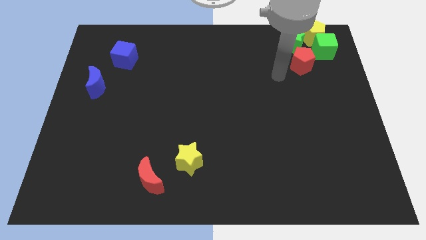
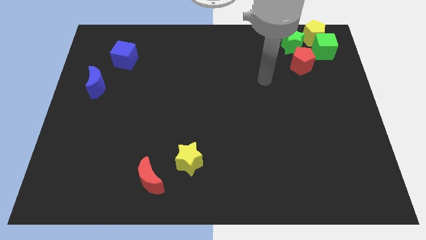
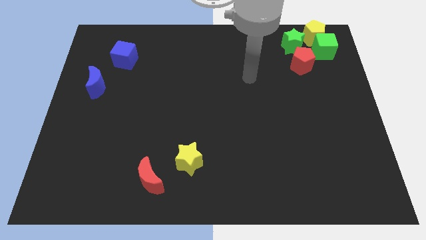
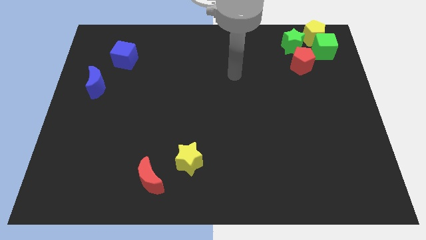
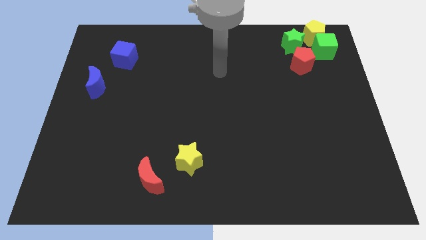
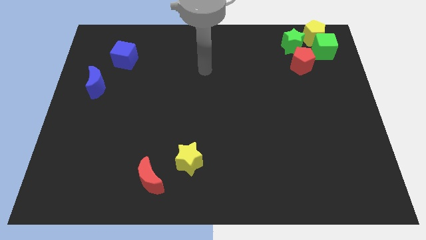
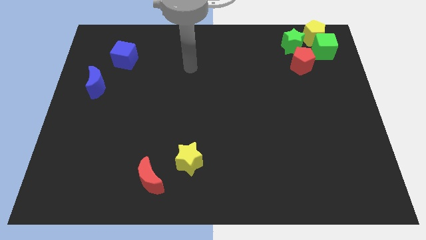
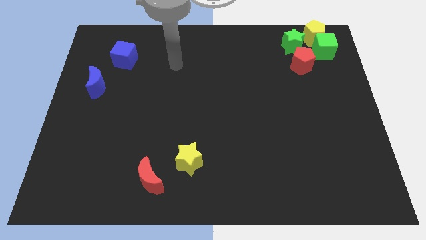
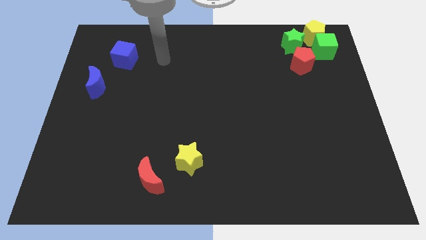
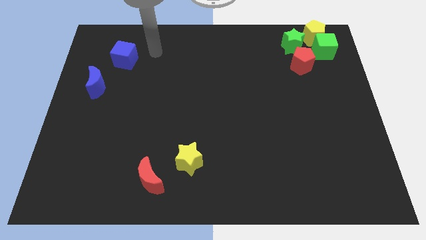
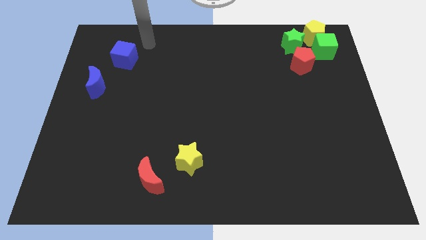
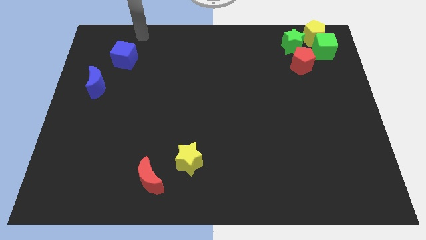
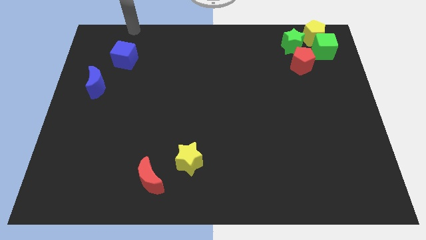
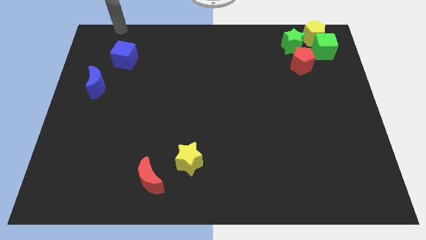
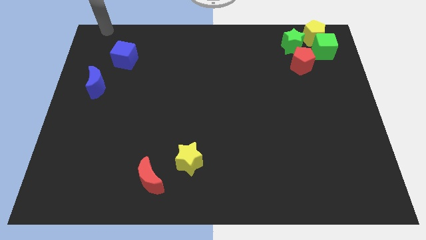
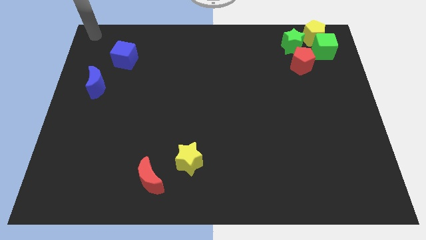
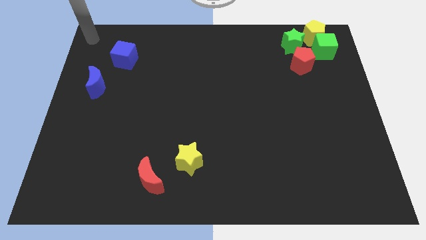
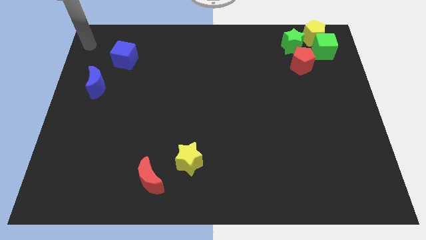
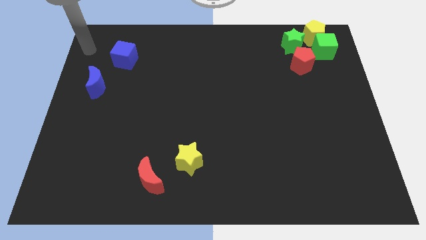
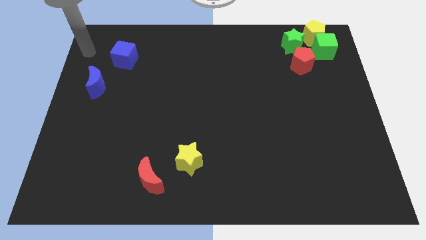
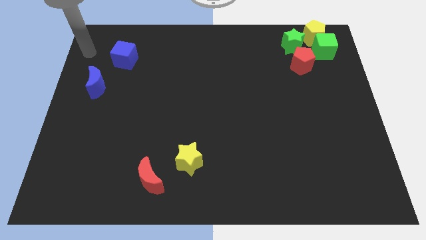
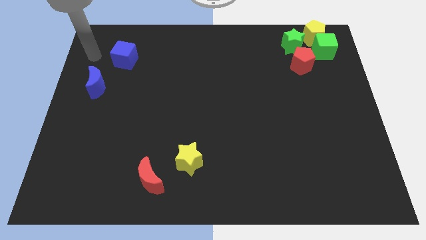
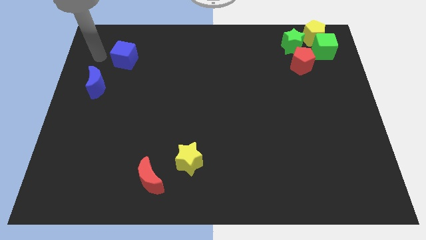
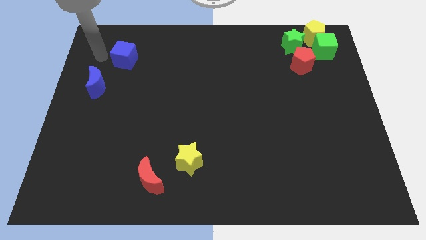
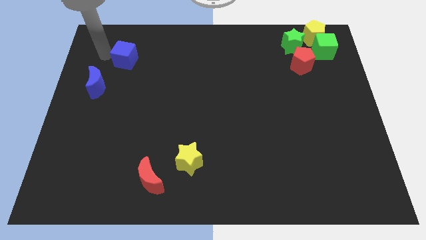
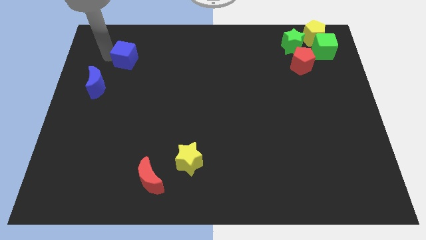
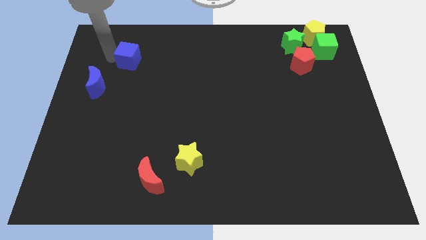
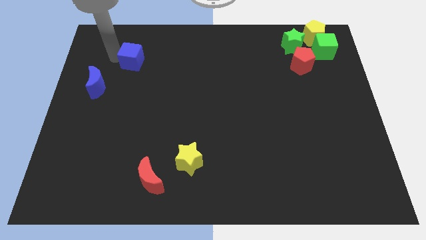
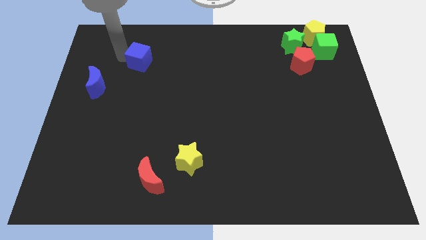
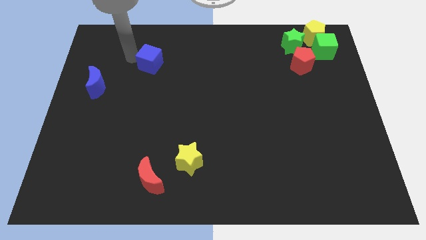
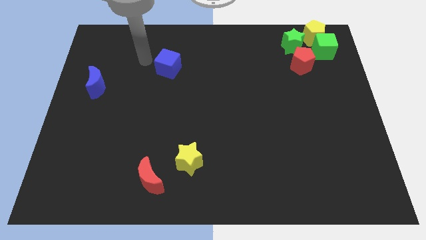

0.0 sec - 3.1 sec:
slide the blue cube to the right side of the board slightly

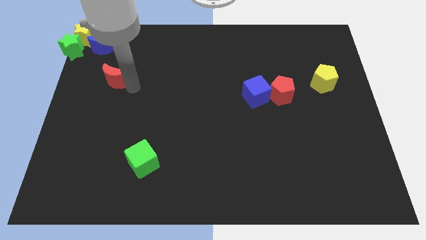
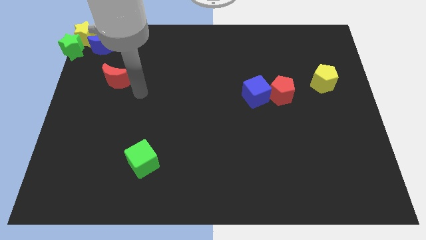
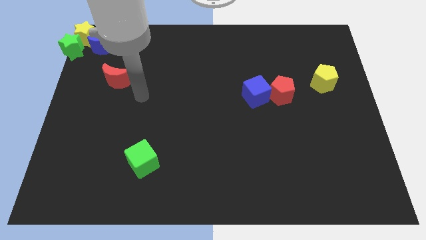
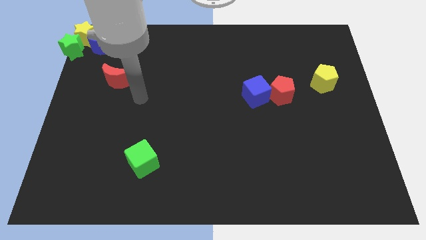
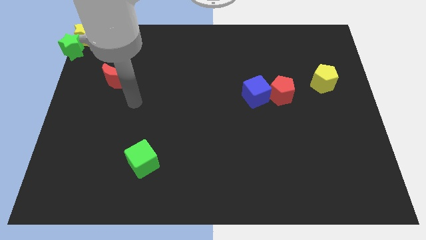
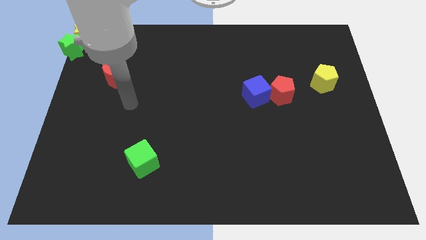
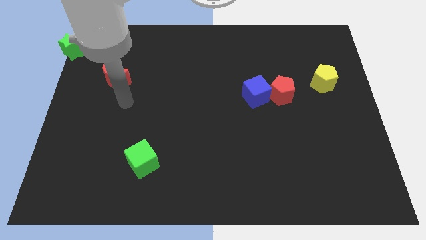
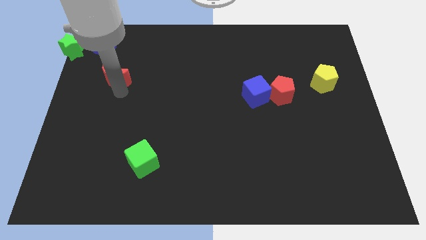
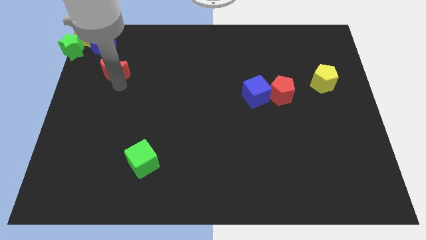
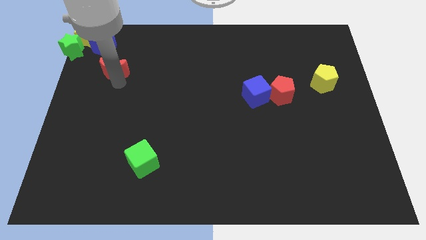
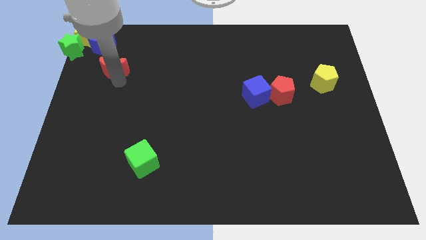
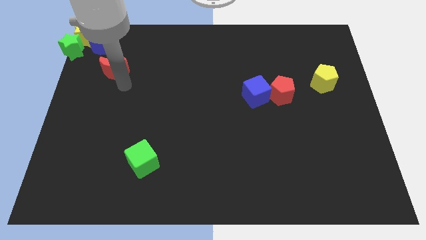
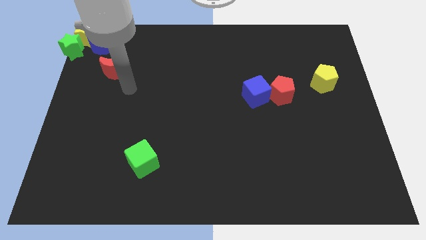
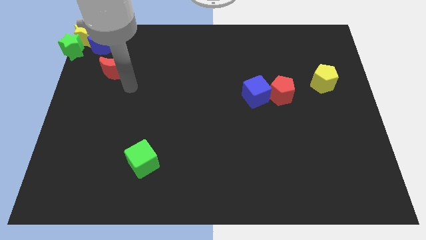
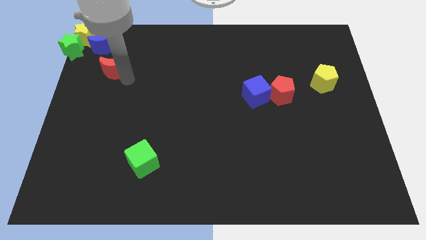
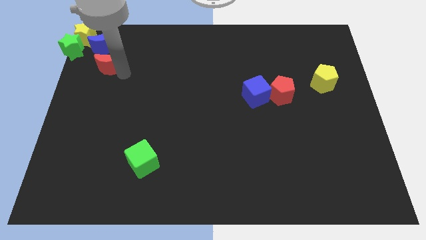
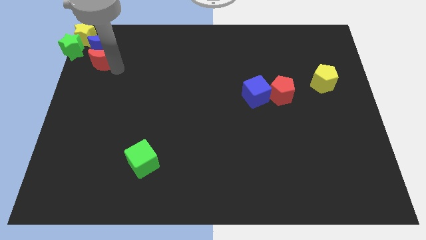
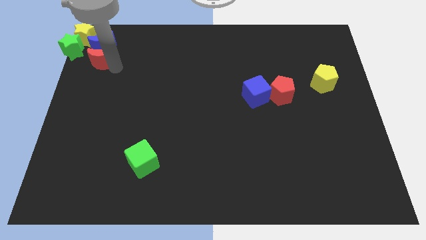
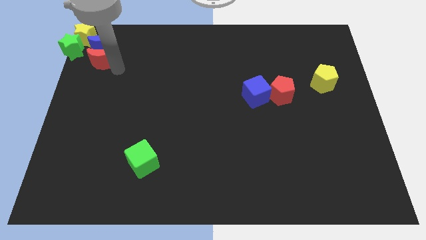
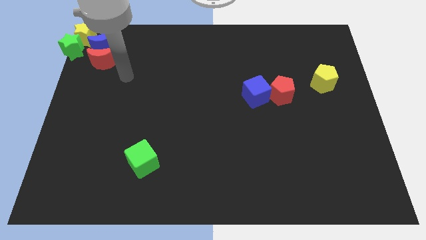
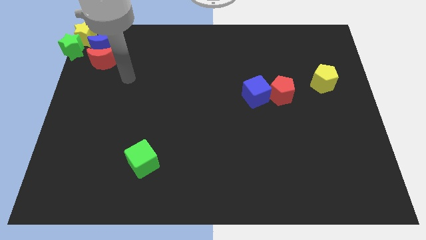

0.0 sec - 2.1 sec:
place the red moon to the bottom of the blue moon

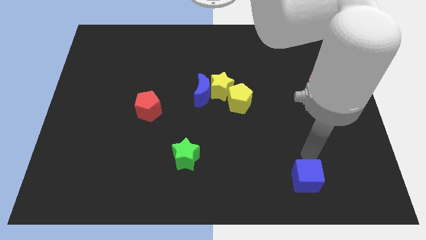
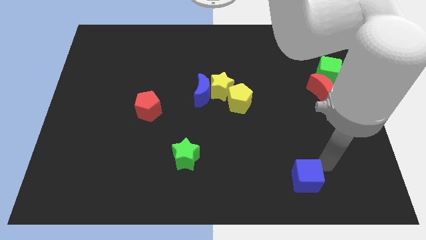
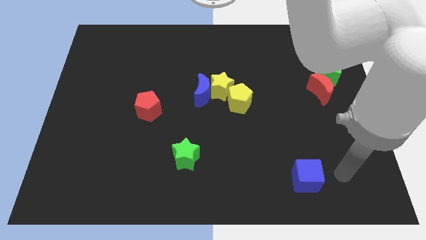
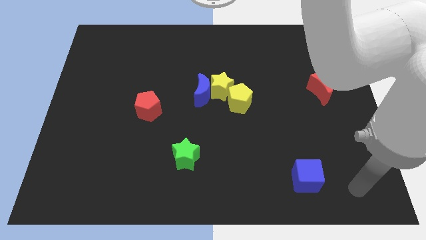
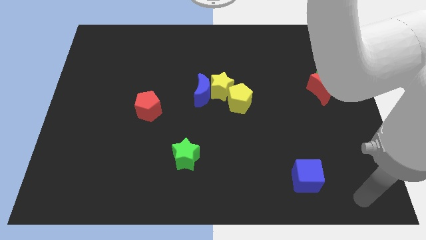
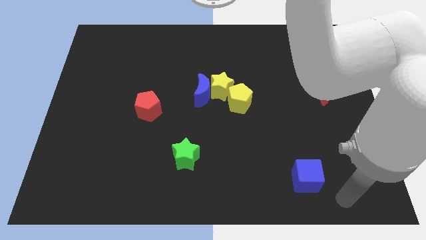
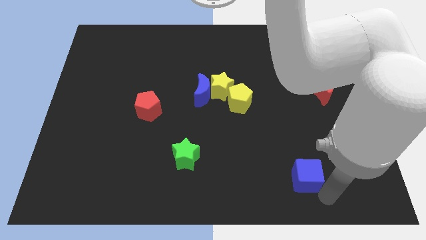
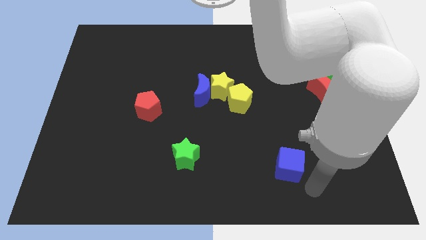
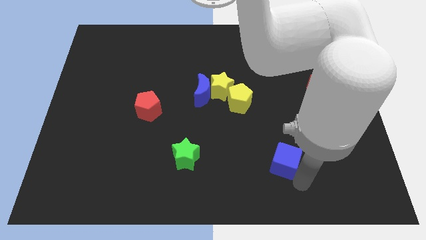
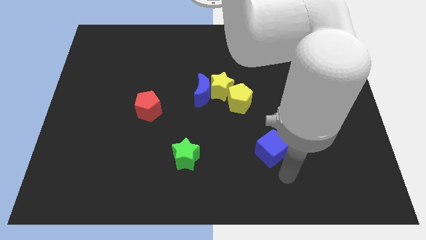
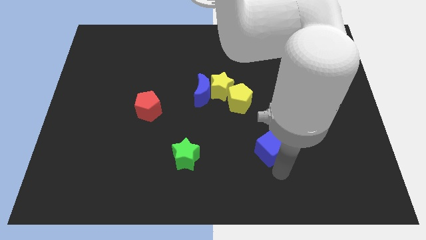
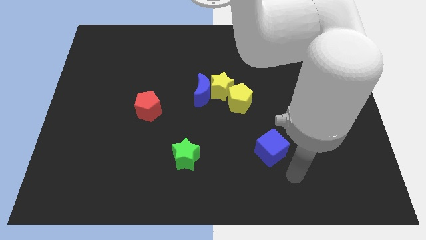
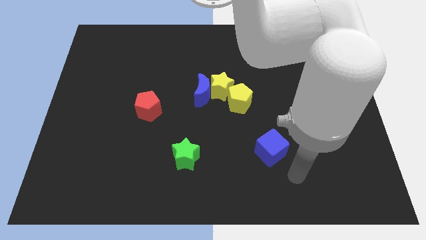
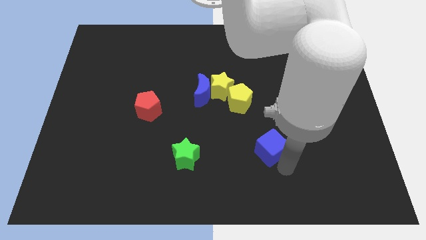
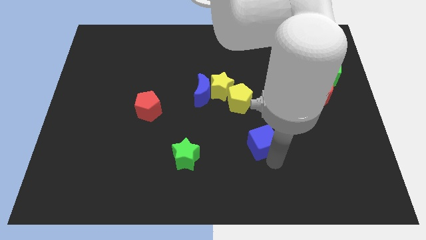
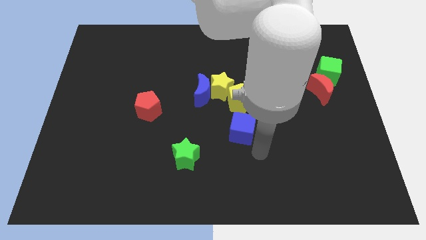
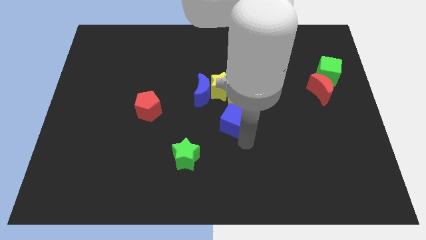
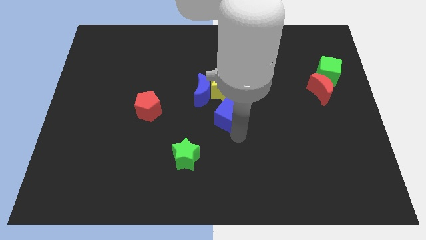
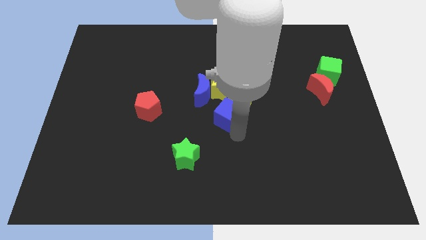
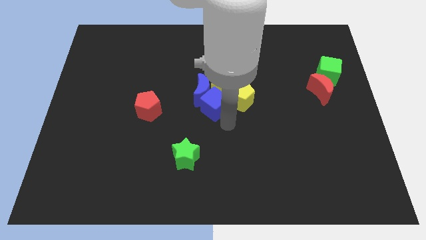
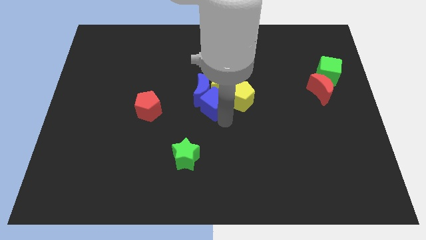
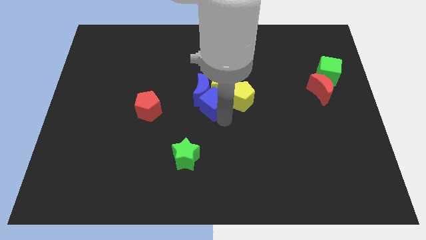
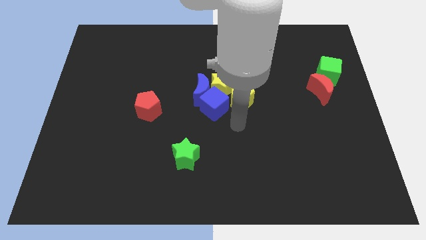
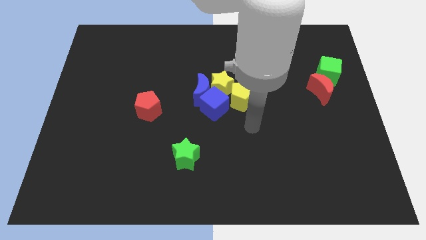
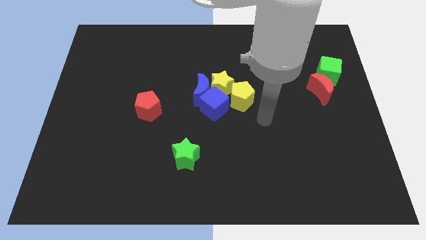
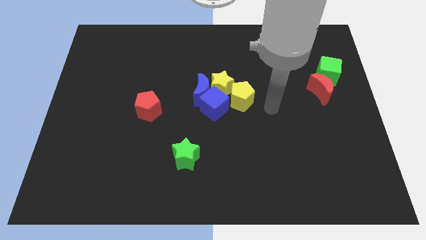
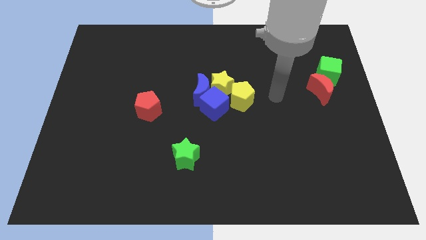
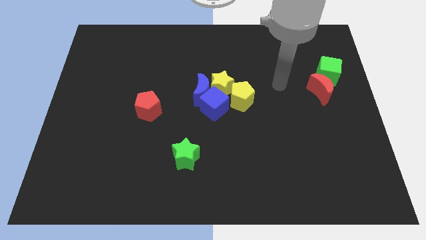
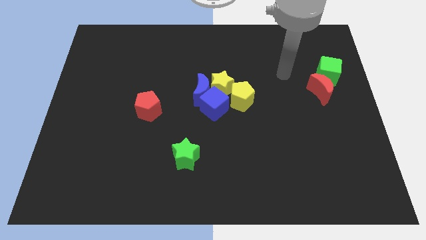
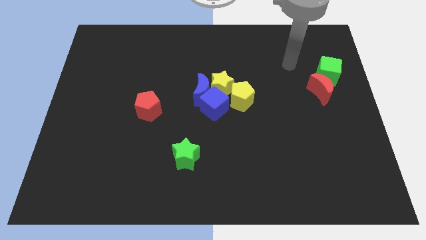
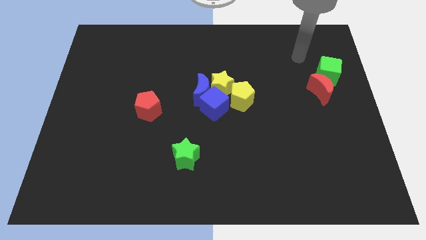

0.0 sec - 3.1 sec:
place the blue cube into the group of blue crescent from the bottom of the yellow star

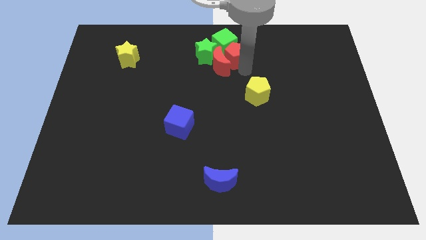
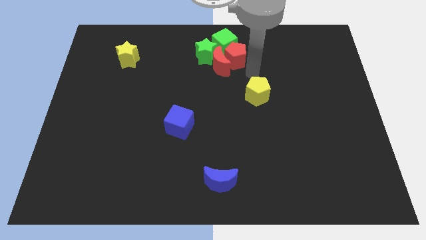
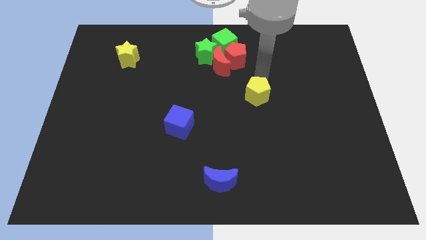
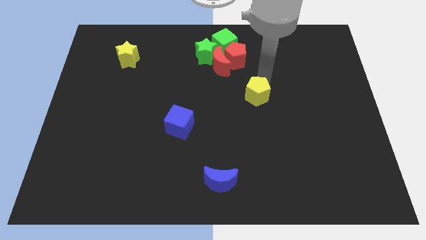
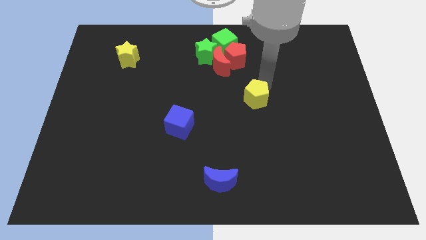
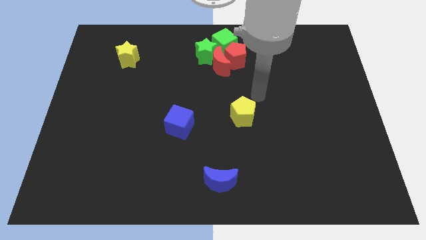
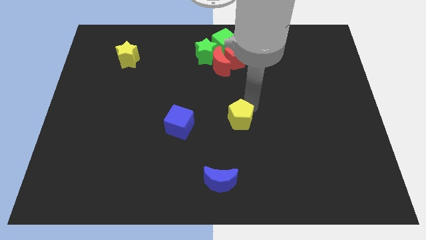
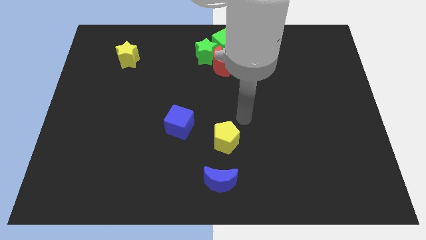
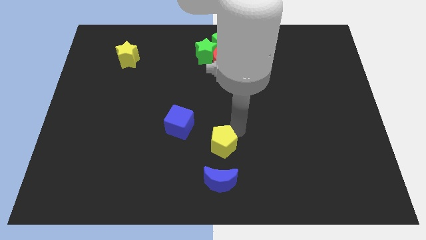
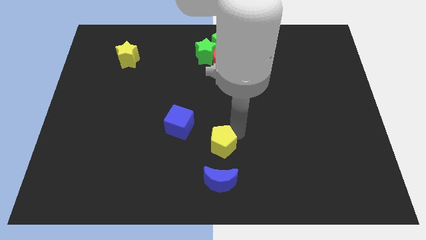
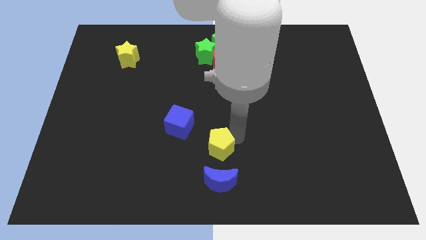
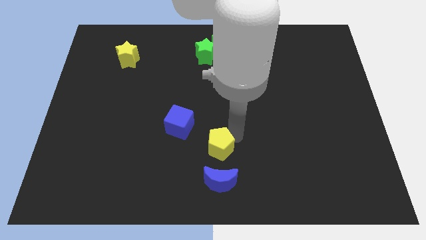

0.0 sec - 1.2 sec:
move yellow pentagon on top of blue moon
